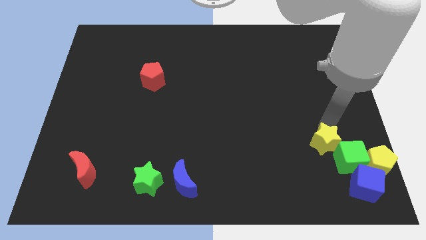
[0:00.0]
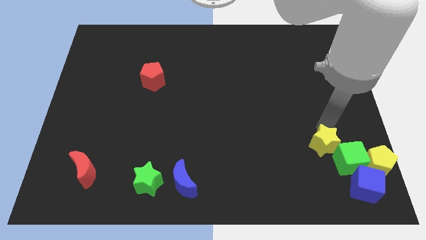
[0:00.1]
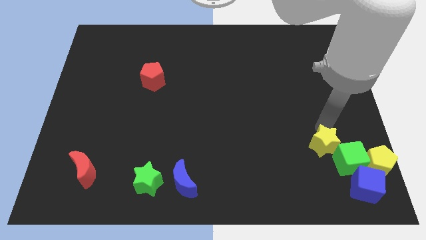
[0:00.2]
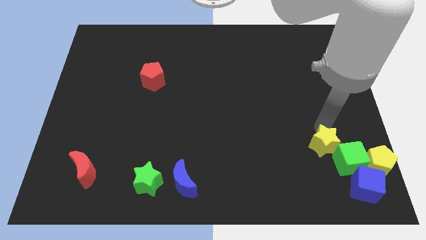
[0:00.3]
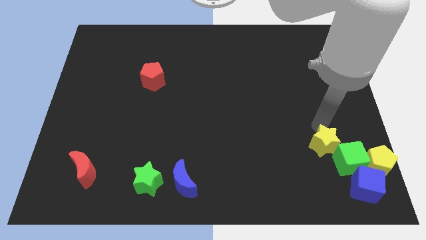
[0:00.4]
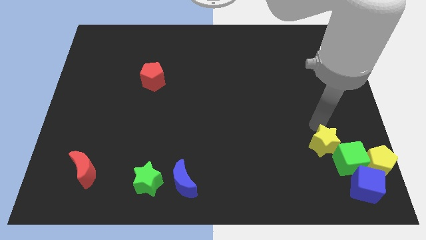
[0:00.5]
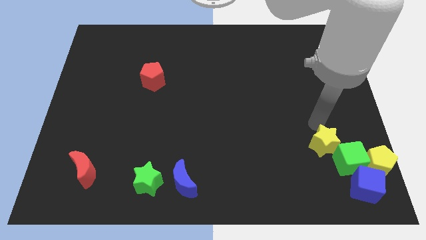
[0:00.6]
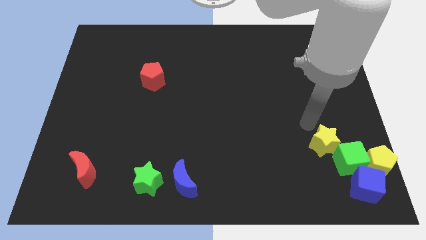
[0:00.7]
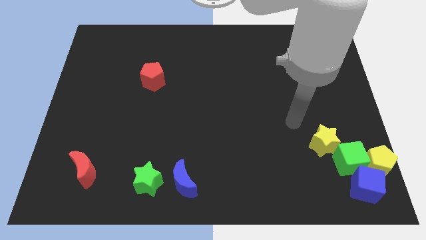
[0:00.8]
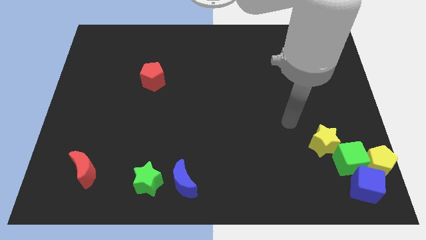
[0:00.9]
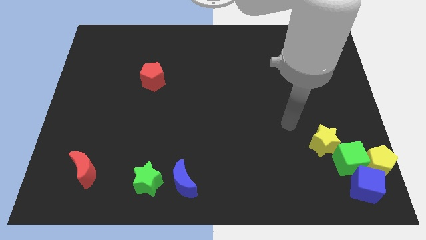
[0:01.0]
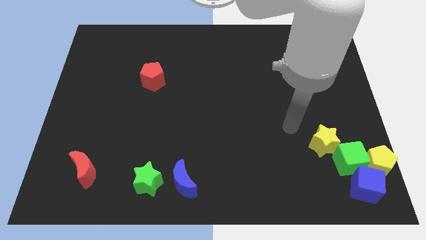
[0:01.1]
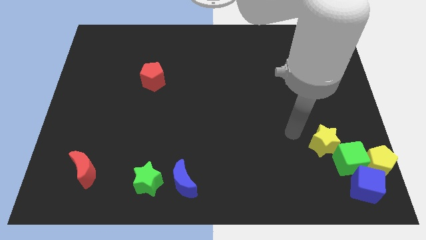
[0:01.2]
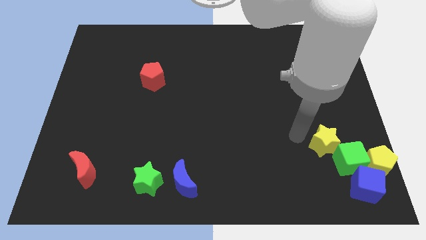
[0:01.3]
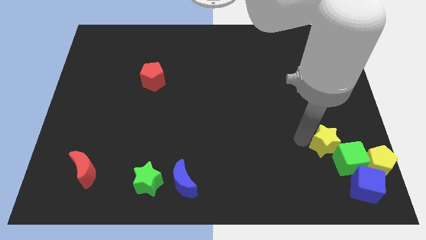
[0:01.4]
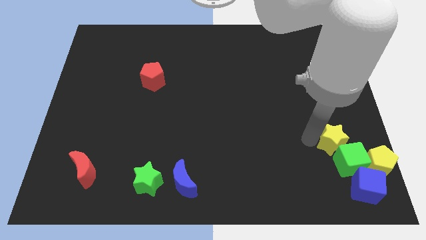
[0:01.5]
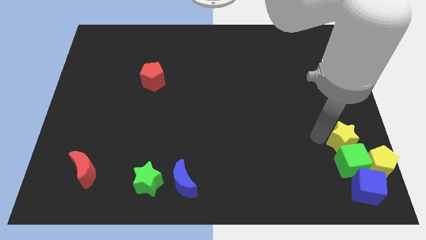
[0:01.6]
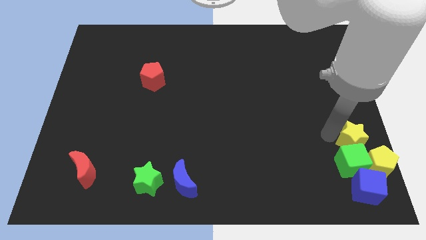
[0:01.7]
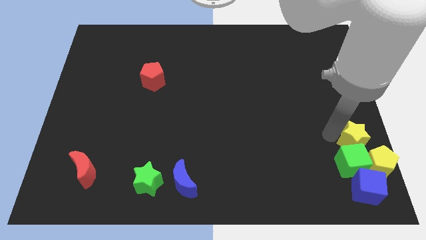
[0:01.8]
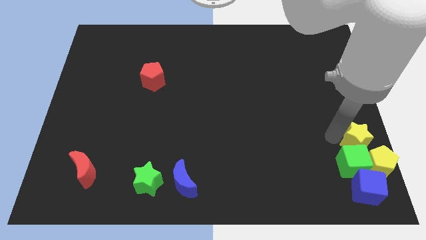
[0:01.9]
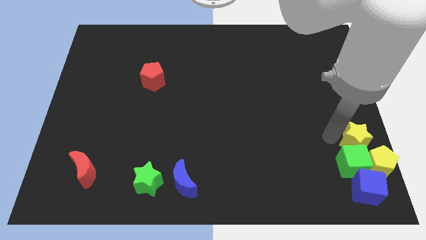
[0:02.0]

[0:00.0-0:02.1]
move the yellow star to the top of the green cube

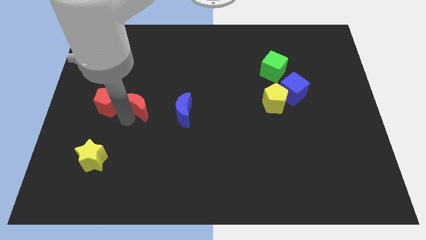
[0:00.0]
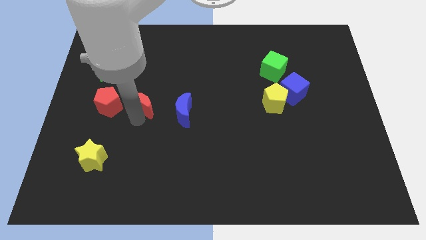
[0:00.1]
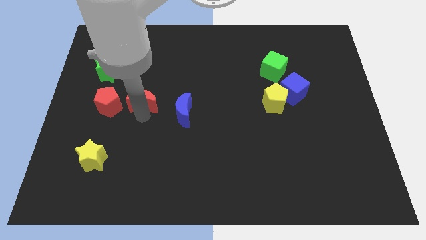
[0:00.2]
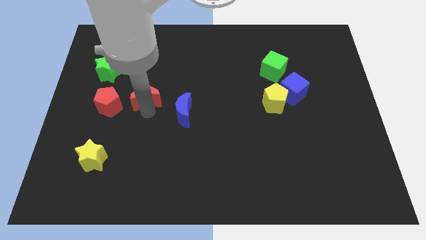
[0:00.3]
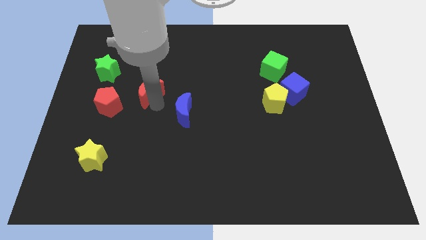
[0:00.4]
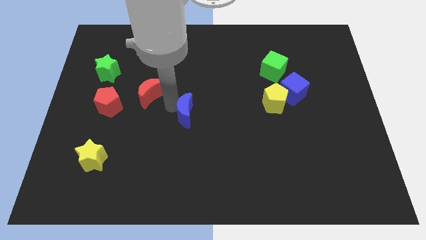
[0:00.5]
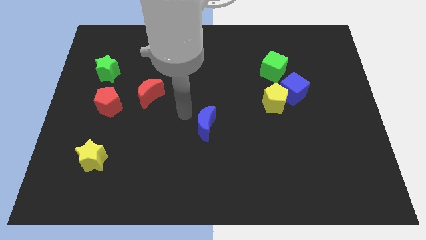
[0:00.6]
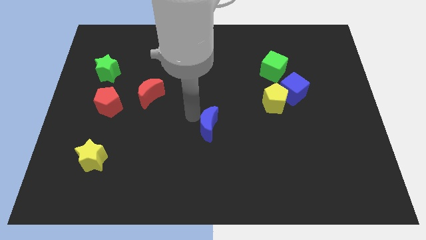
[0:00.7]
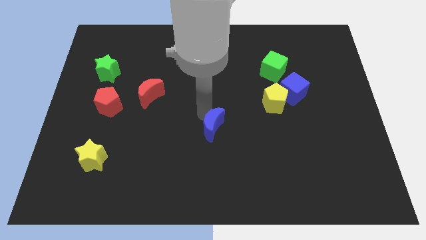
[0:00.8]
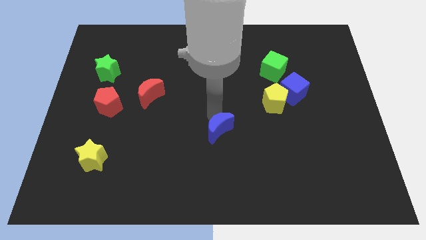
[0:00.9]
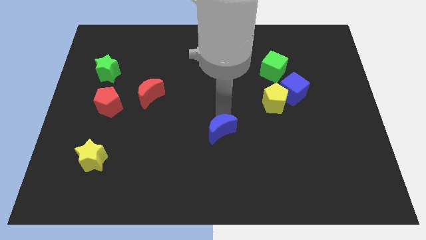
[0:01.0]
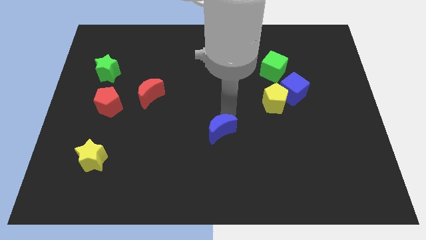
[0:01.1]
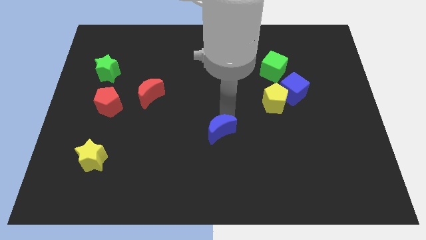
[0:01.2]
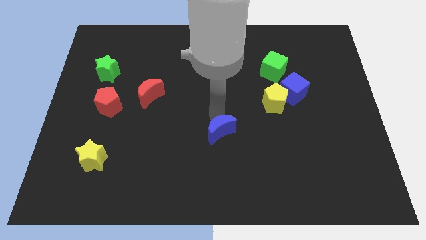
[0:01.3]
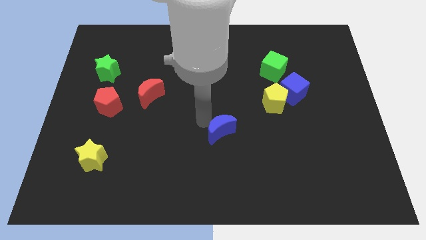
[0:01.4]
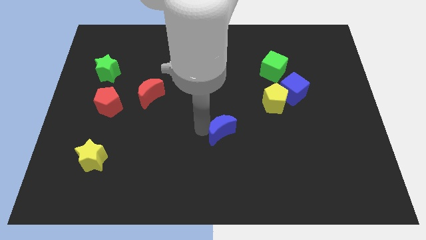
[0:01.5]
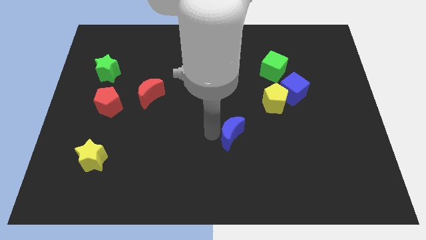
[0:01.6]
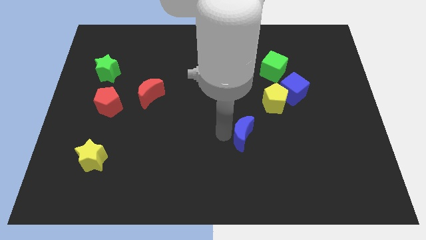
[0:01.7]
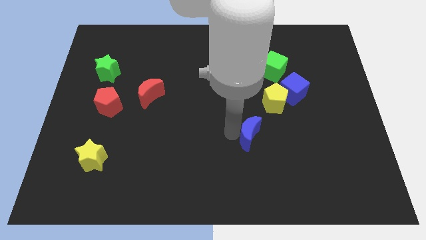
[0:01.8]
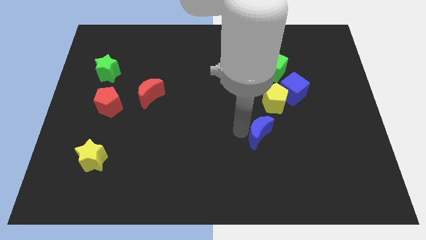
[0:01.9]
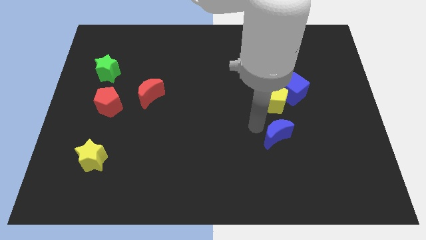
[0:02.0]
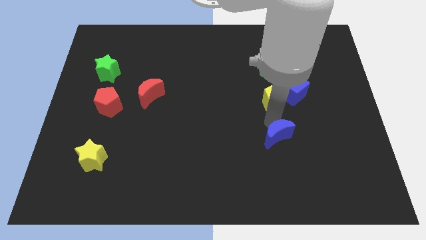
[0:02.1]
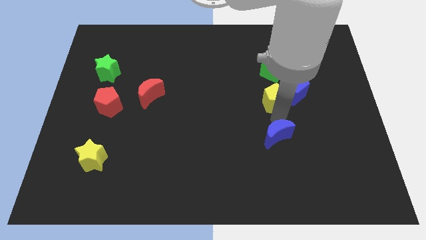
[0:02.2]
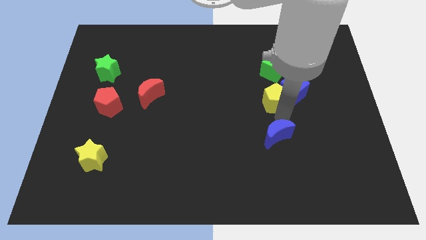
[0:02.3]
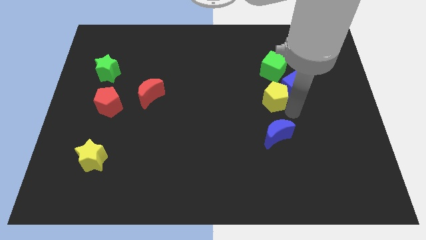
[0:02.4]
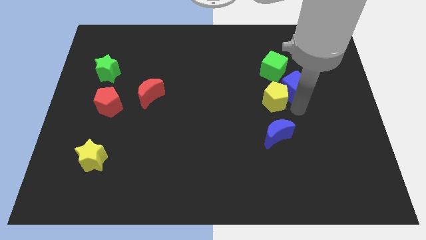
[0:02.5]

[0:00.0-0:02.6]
put the blue moon vertically below the yellow pentagon

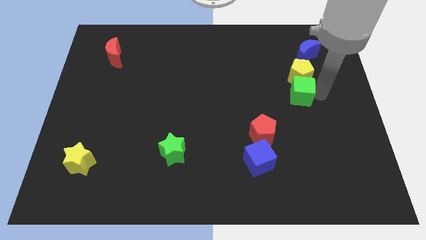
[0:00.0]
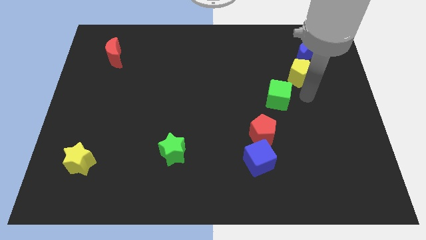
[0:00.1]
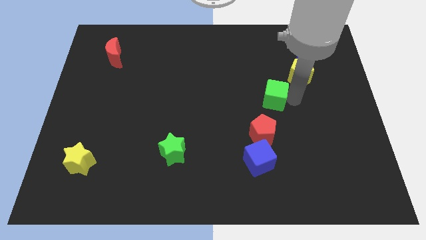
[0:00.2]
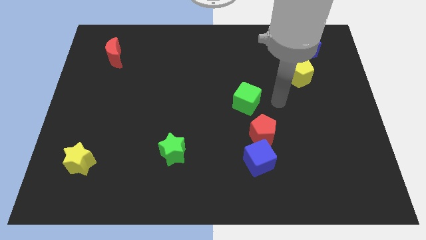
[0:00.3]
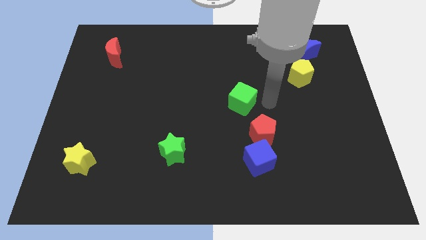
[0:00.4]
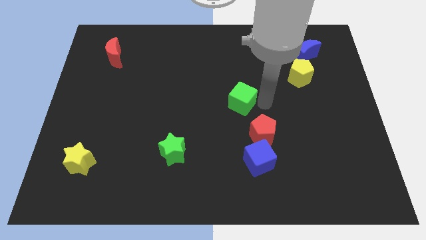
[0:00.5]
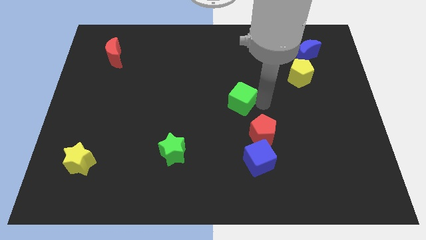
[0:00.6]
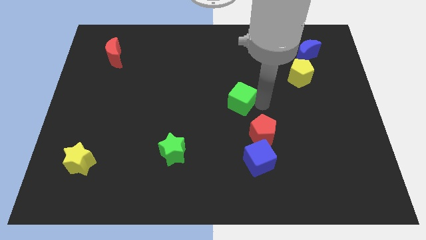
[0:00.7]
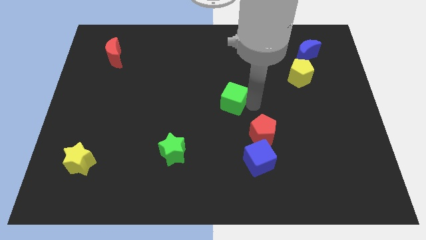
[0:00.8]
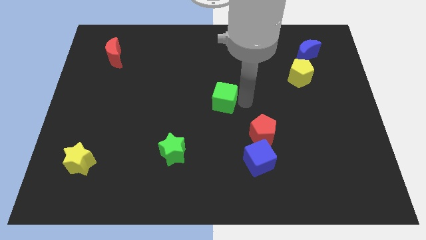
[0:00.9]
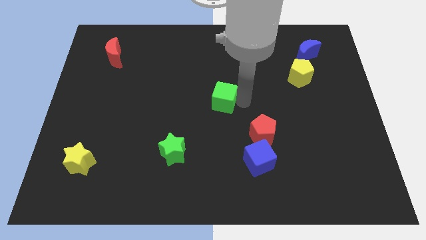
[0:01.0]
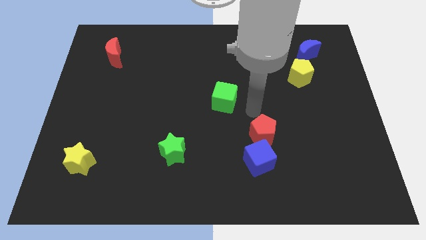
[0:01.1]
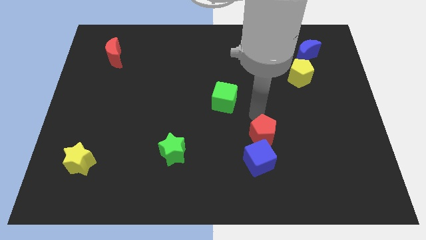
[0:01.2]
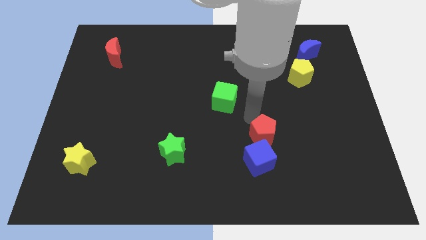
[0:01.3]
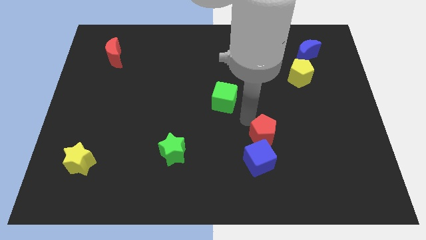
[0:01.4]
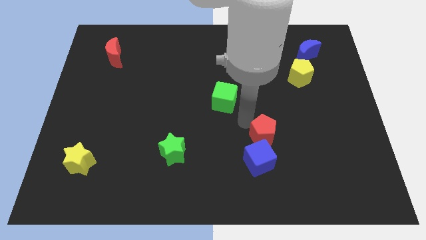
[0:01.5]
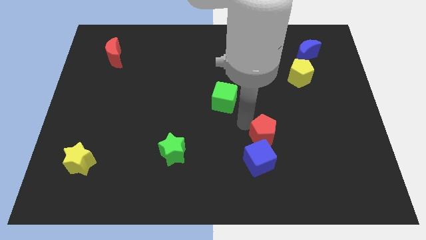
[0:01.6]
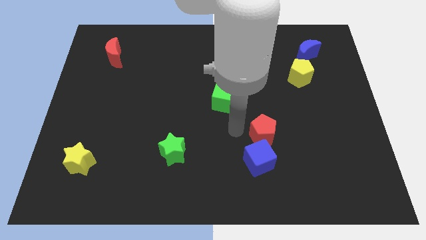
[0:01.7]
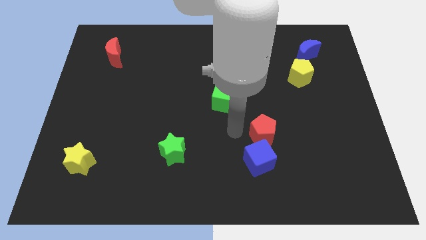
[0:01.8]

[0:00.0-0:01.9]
move green cube at the center

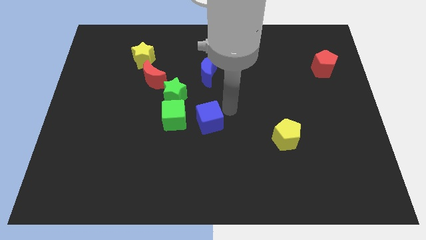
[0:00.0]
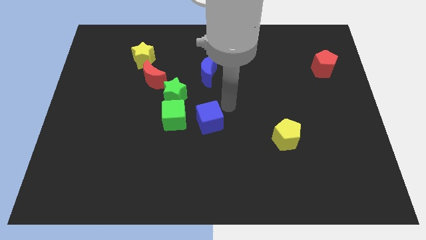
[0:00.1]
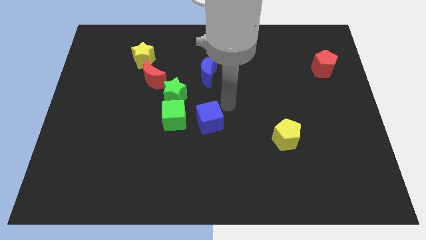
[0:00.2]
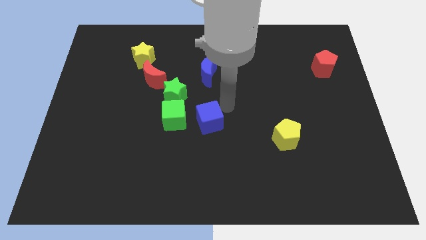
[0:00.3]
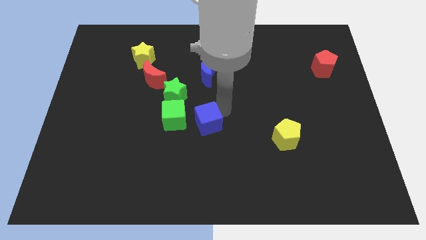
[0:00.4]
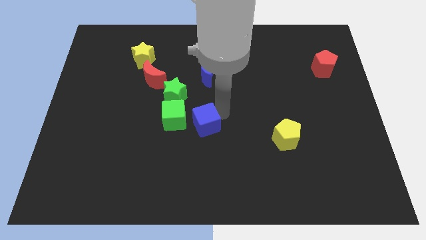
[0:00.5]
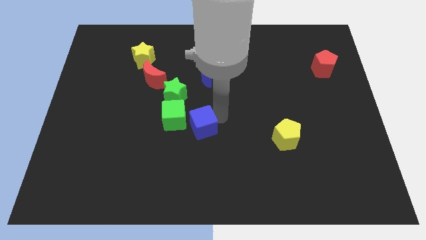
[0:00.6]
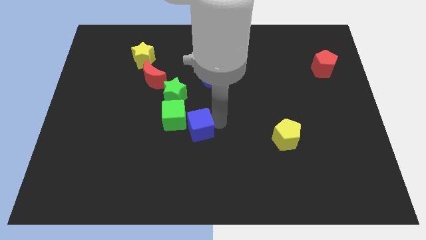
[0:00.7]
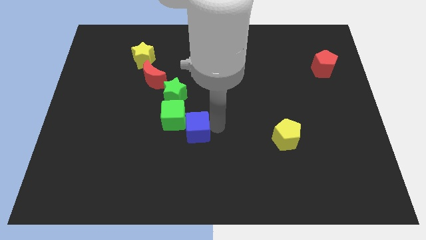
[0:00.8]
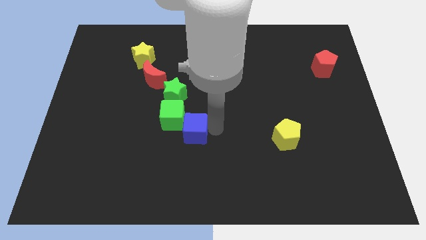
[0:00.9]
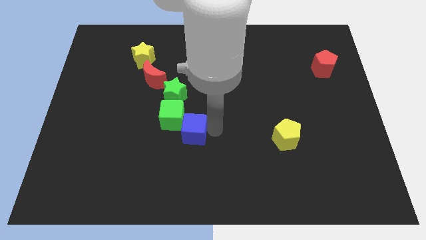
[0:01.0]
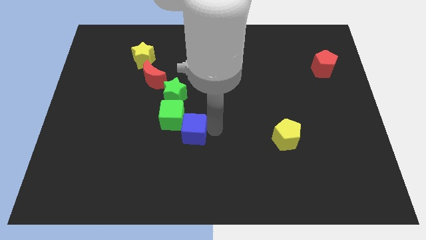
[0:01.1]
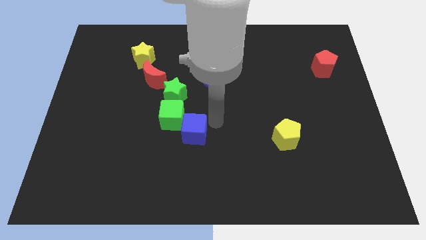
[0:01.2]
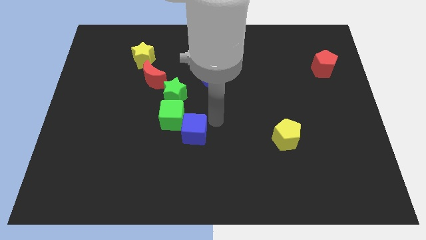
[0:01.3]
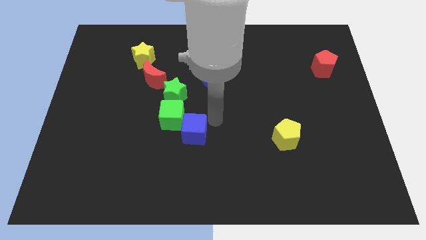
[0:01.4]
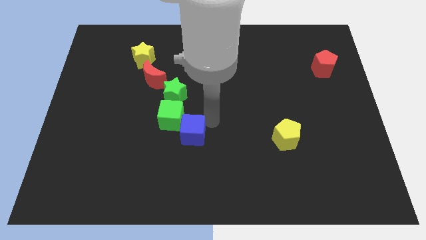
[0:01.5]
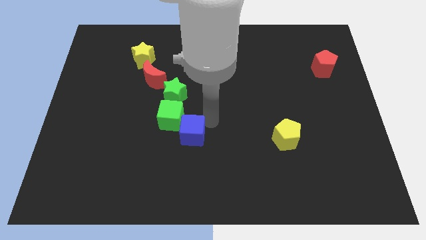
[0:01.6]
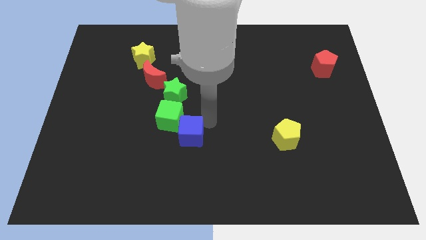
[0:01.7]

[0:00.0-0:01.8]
push the blue cube into the green cube

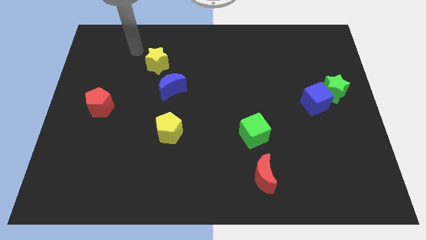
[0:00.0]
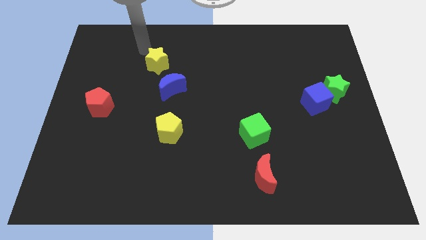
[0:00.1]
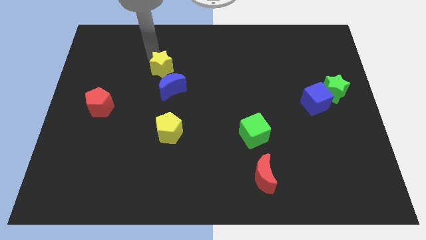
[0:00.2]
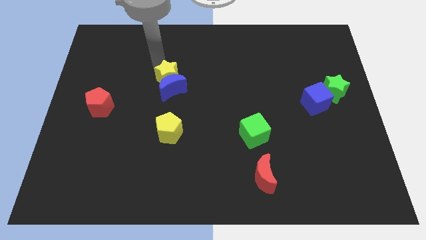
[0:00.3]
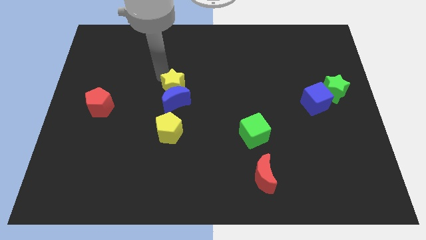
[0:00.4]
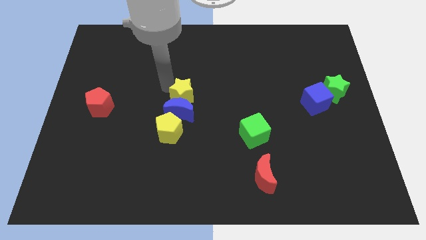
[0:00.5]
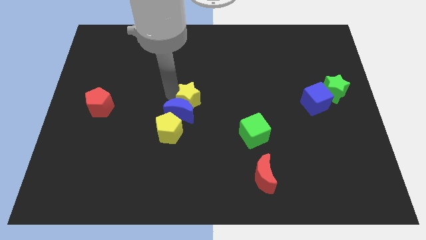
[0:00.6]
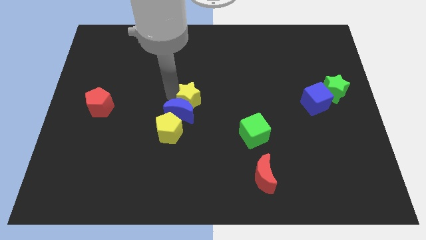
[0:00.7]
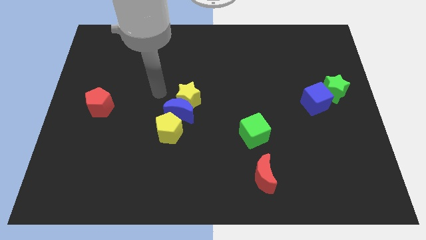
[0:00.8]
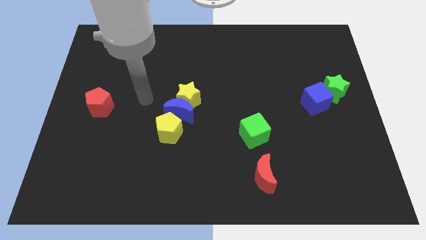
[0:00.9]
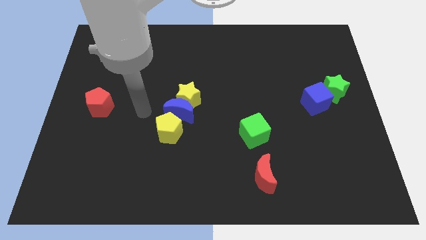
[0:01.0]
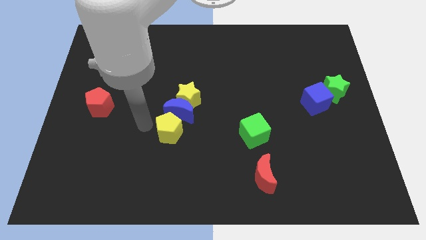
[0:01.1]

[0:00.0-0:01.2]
push the yellow star into the blue crescent
